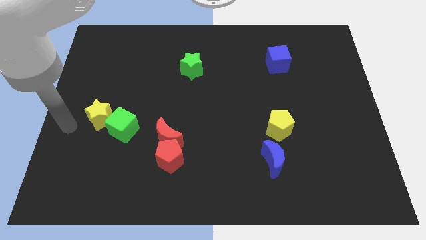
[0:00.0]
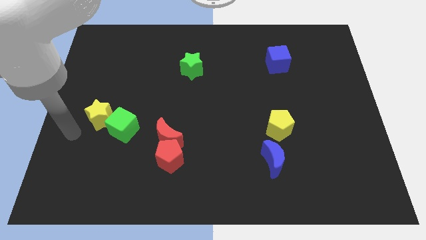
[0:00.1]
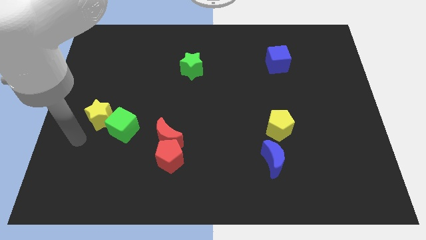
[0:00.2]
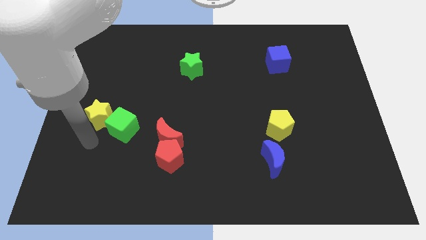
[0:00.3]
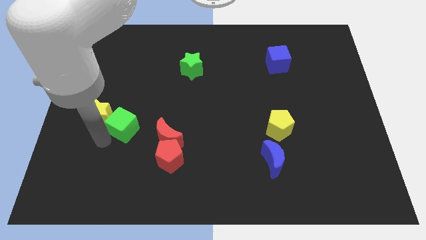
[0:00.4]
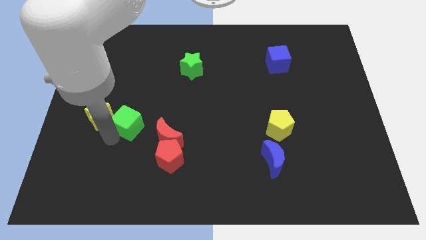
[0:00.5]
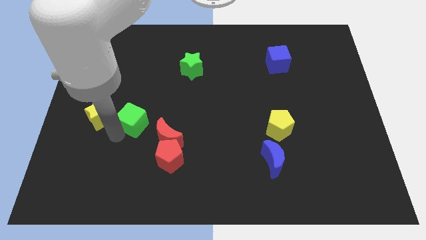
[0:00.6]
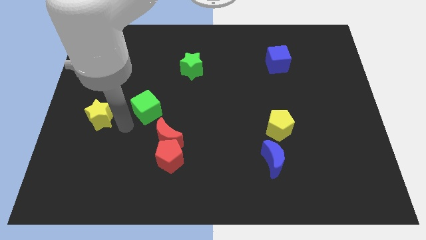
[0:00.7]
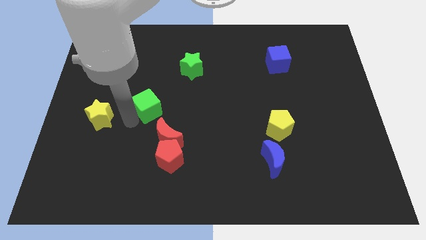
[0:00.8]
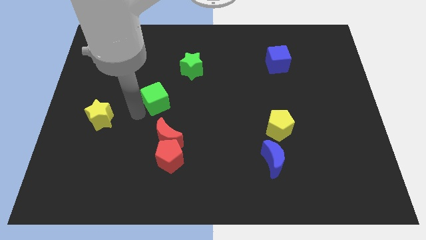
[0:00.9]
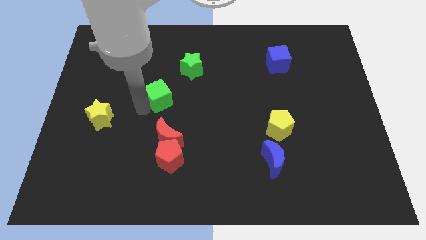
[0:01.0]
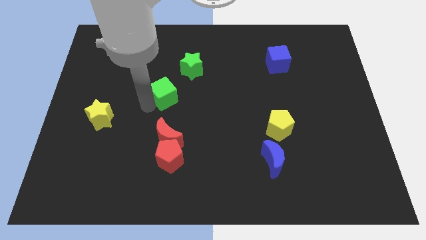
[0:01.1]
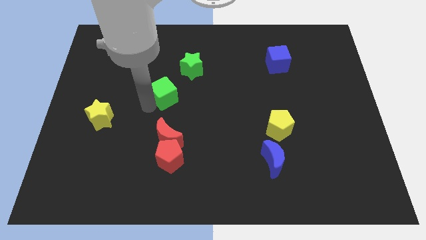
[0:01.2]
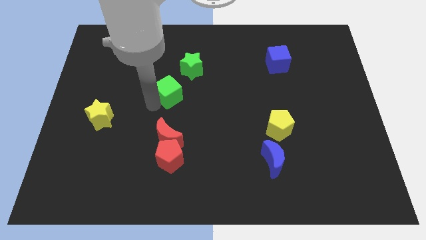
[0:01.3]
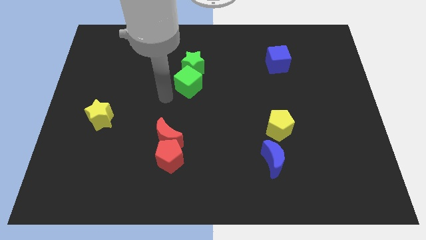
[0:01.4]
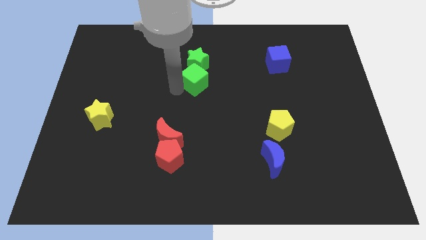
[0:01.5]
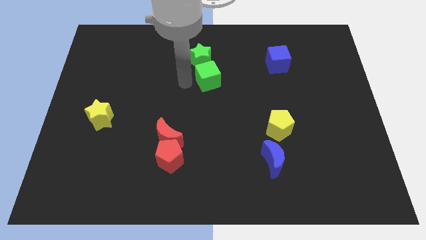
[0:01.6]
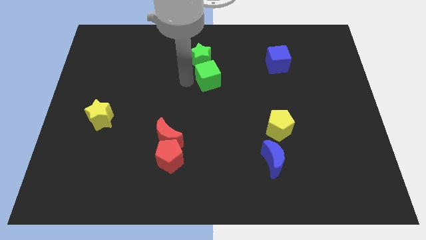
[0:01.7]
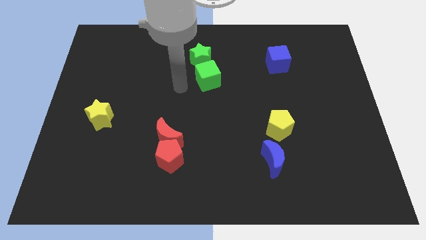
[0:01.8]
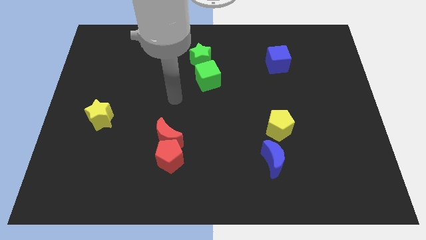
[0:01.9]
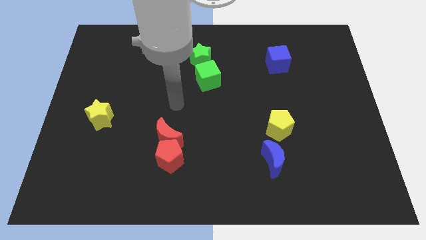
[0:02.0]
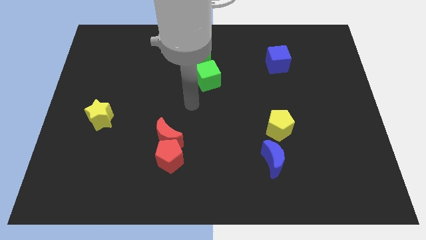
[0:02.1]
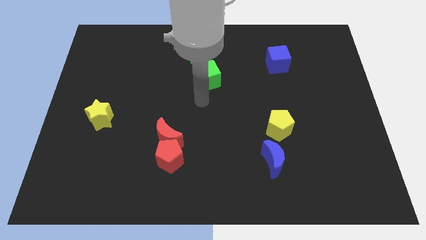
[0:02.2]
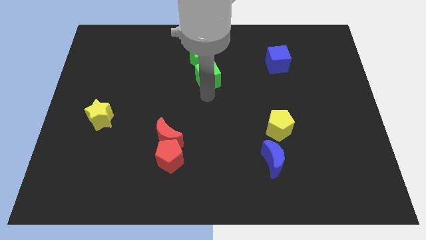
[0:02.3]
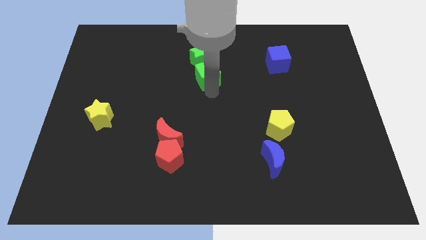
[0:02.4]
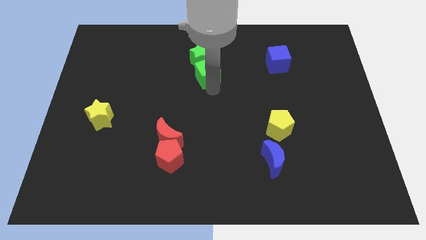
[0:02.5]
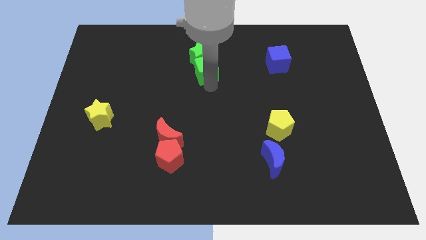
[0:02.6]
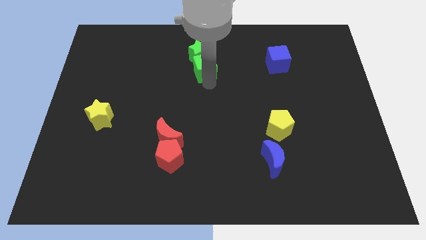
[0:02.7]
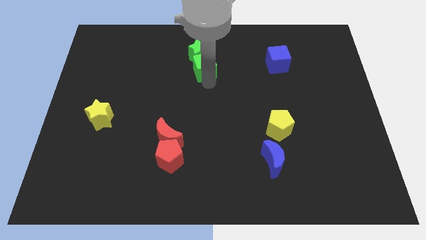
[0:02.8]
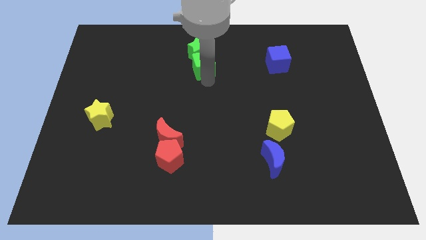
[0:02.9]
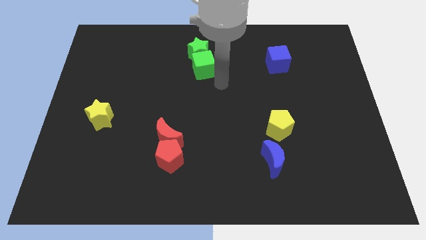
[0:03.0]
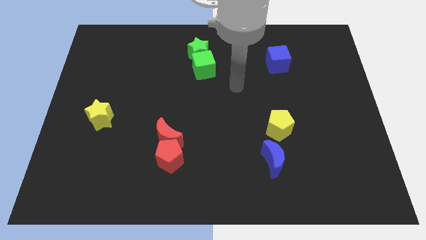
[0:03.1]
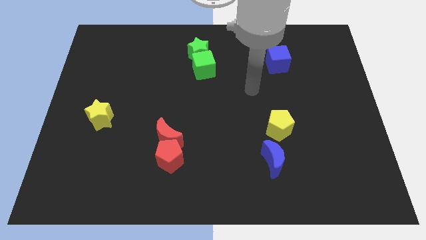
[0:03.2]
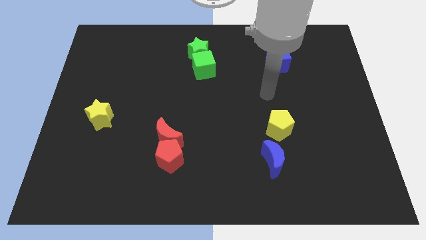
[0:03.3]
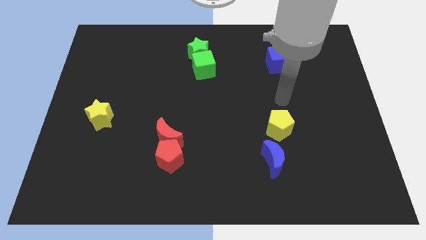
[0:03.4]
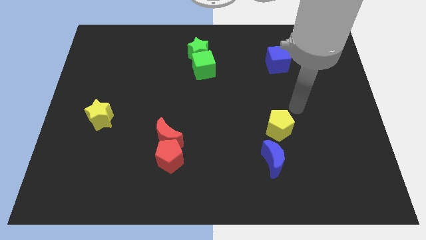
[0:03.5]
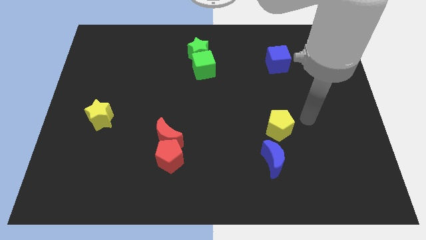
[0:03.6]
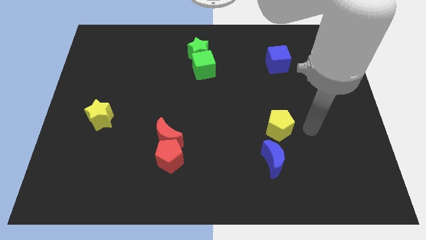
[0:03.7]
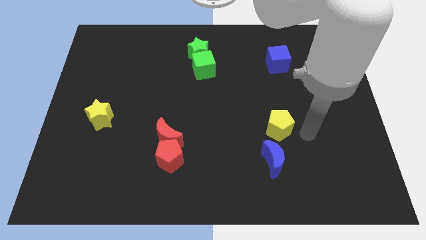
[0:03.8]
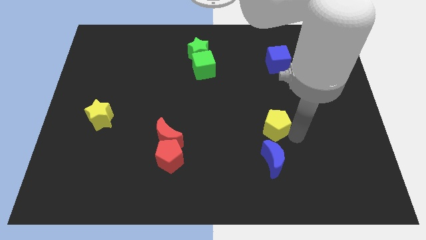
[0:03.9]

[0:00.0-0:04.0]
slide the green cube into the green star

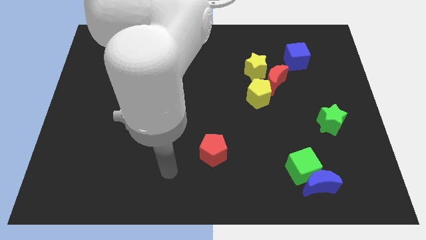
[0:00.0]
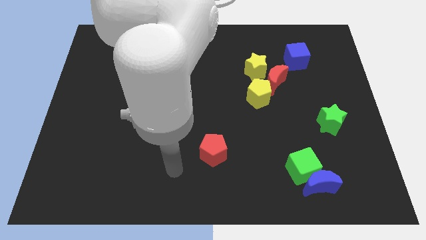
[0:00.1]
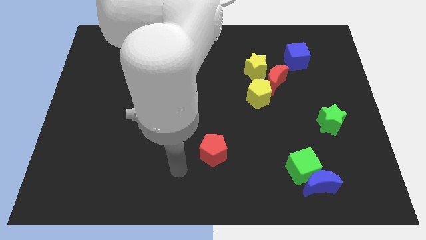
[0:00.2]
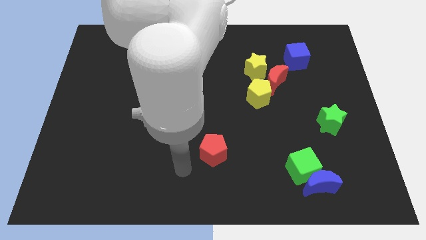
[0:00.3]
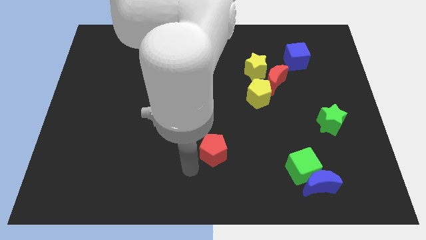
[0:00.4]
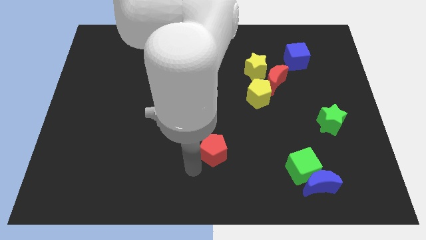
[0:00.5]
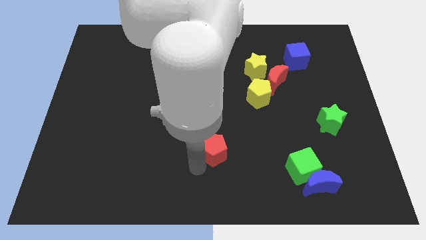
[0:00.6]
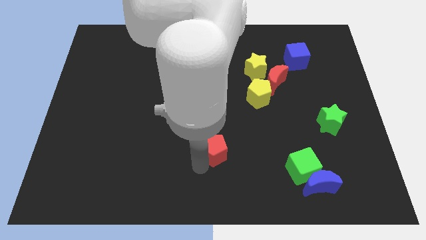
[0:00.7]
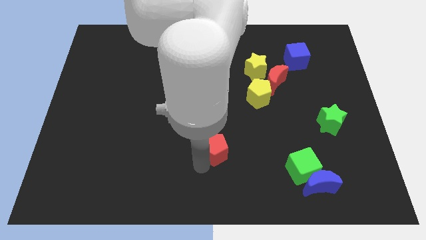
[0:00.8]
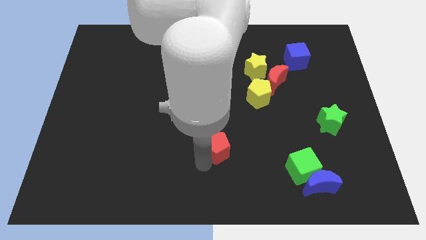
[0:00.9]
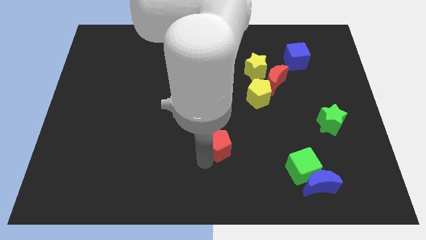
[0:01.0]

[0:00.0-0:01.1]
slightly push the red pentagon to the right of the board

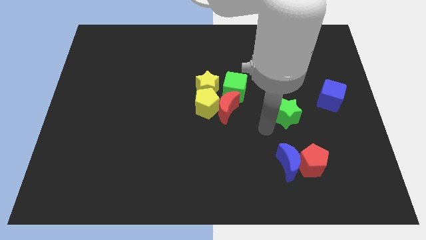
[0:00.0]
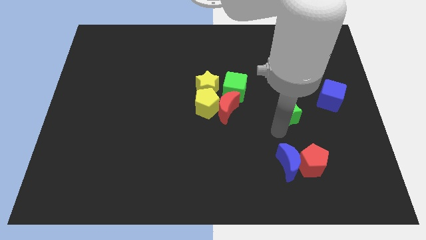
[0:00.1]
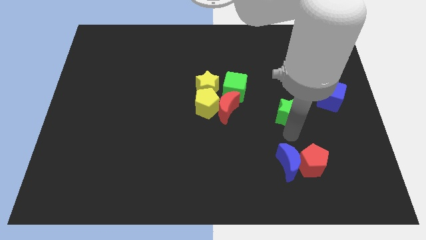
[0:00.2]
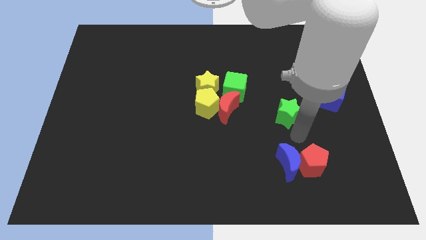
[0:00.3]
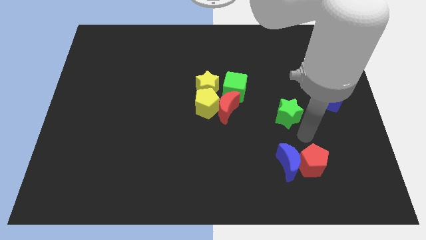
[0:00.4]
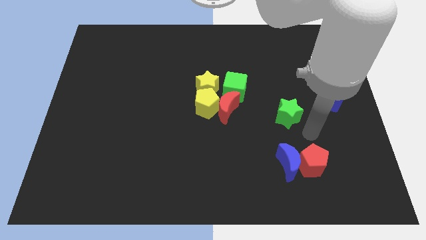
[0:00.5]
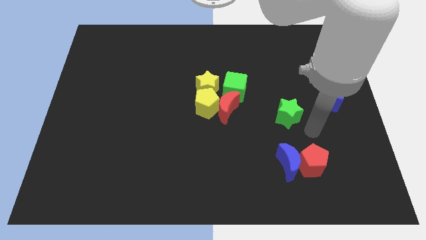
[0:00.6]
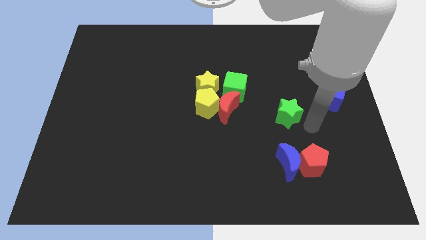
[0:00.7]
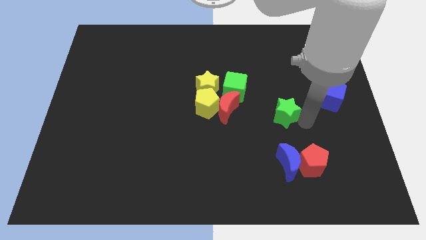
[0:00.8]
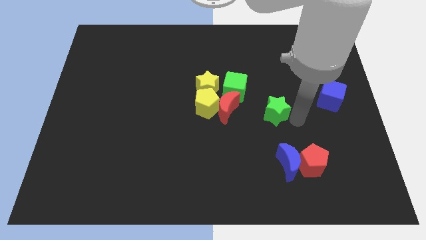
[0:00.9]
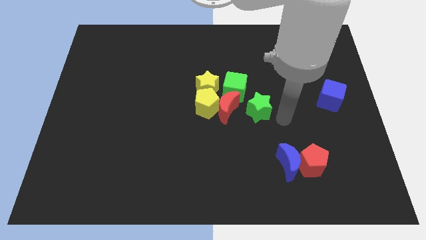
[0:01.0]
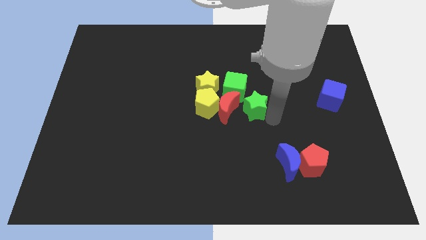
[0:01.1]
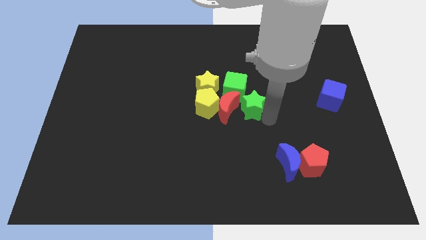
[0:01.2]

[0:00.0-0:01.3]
push the green star to the right side of red moon
